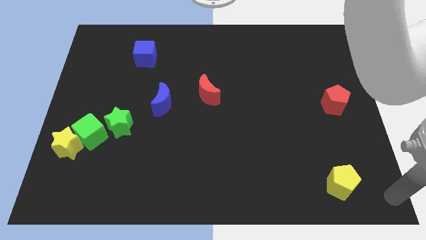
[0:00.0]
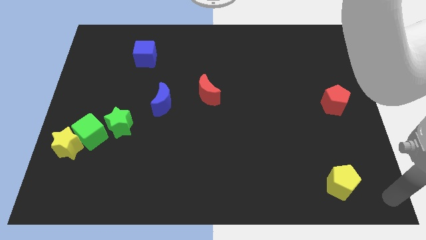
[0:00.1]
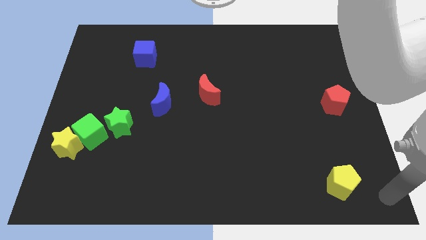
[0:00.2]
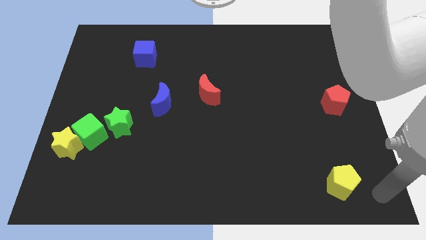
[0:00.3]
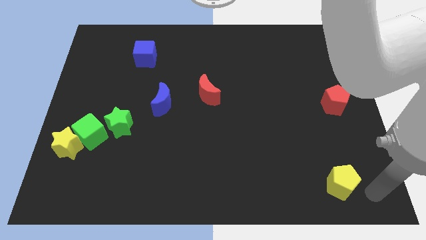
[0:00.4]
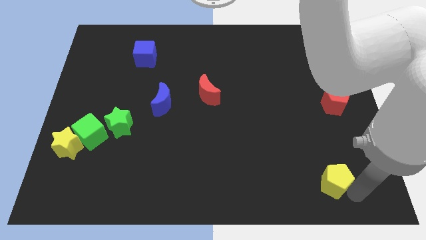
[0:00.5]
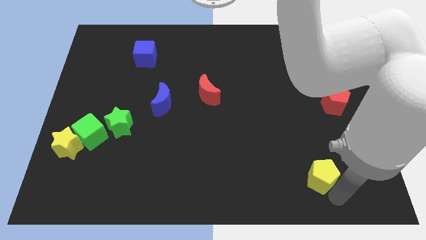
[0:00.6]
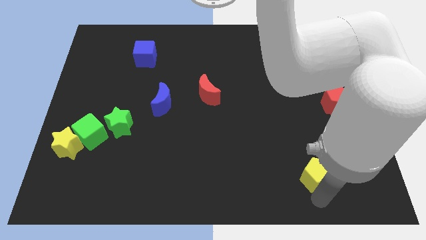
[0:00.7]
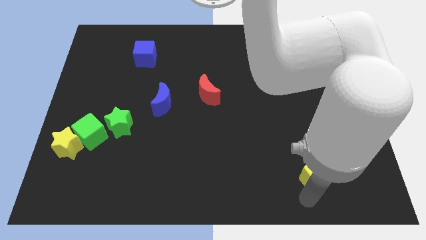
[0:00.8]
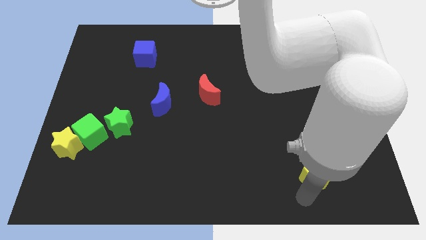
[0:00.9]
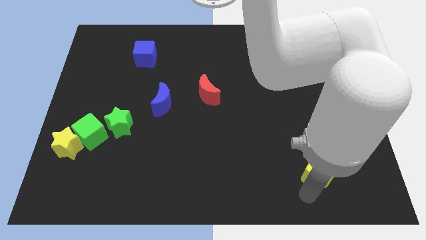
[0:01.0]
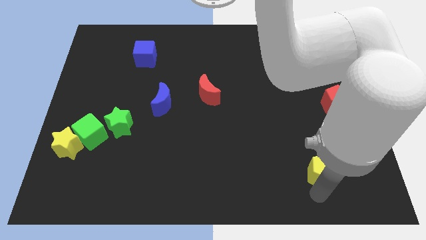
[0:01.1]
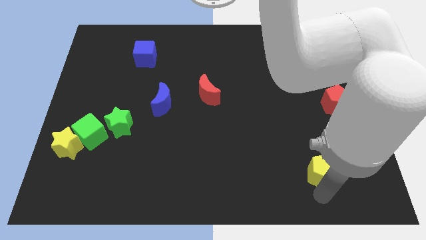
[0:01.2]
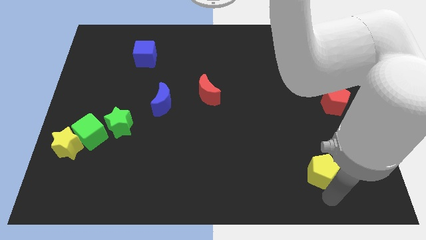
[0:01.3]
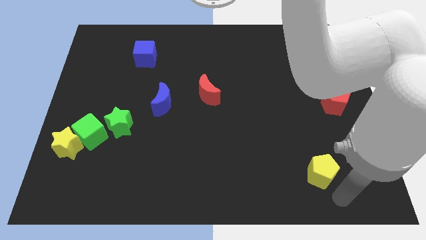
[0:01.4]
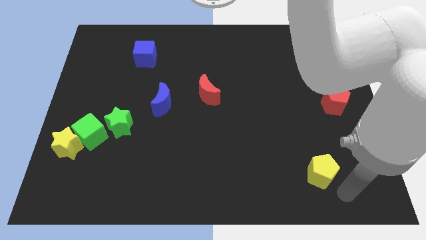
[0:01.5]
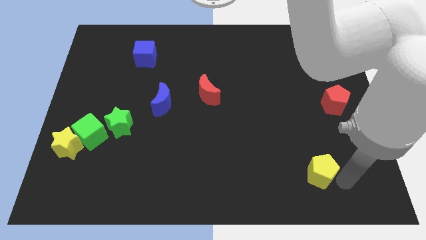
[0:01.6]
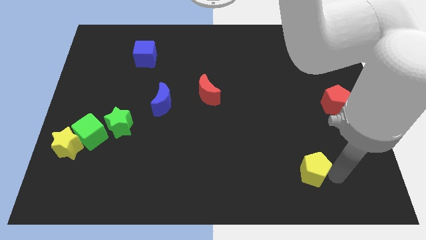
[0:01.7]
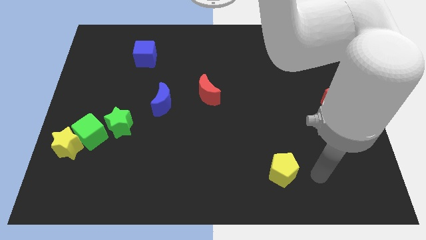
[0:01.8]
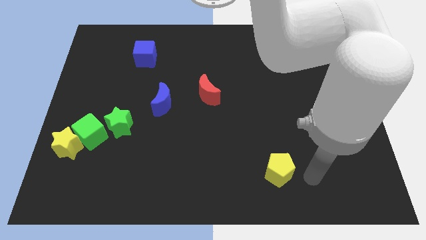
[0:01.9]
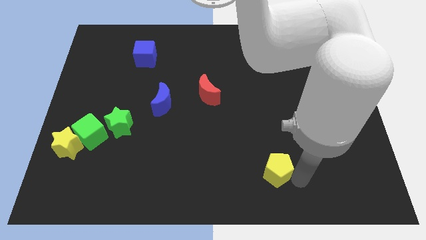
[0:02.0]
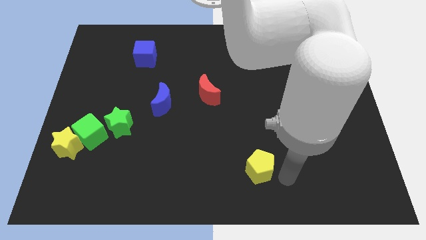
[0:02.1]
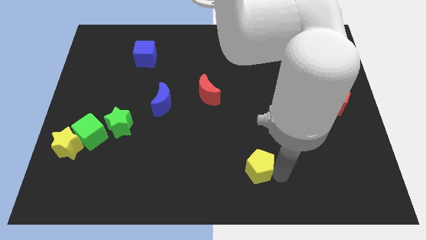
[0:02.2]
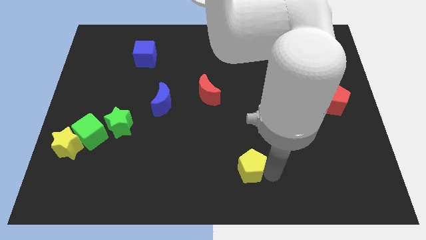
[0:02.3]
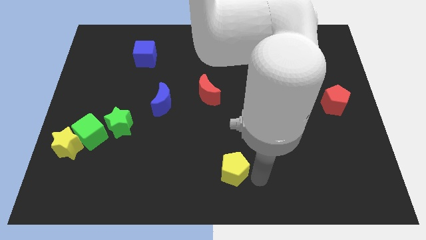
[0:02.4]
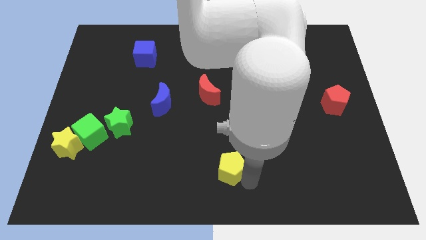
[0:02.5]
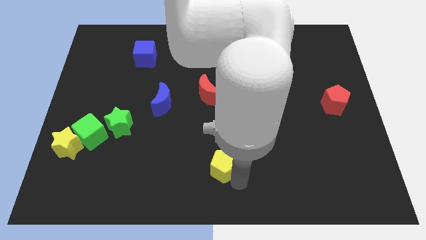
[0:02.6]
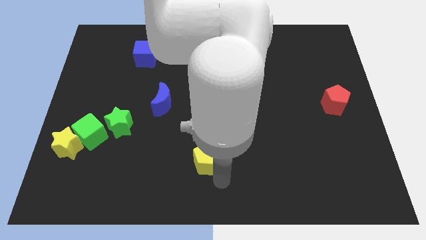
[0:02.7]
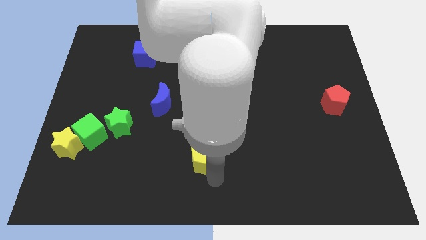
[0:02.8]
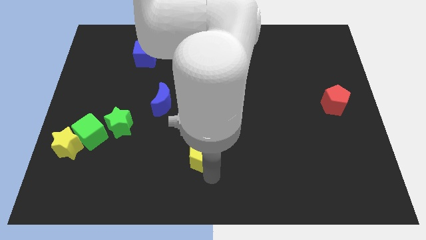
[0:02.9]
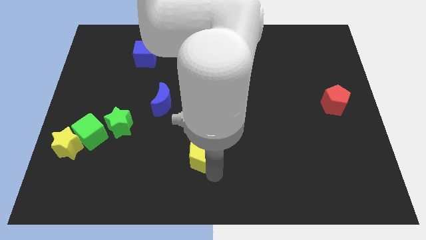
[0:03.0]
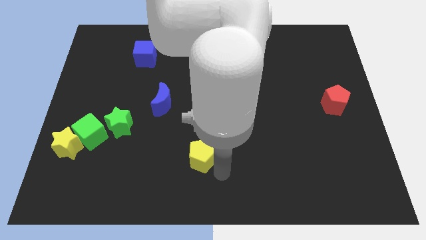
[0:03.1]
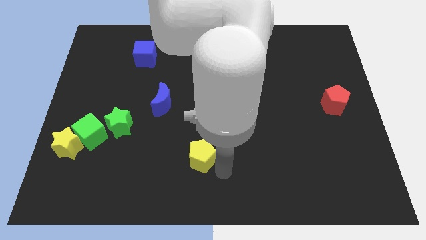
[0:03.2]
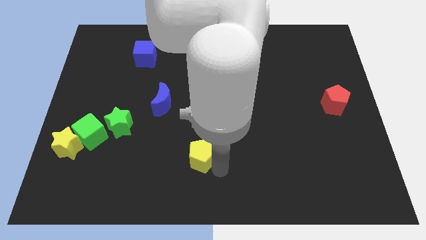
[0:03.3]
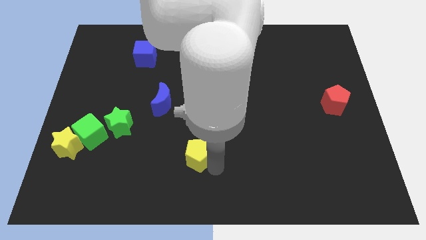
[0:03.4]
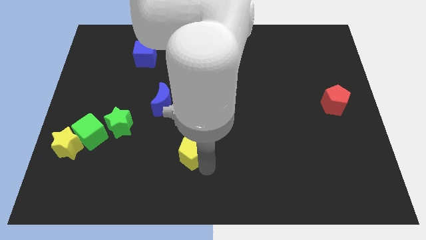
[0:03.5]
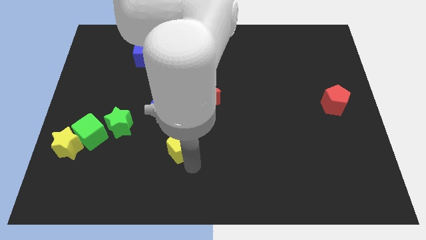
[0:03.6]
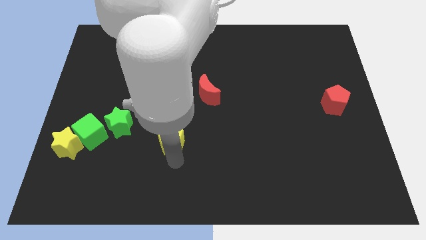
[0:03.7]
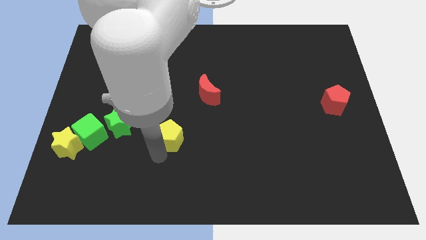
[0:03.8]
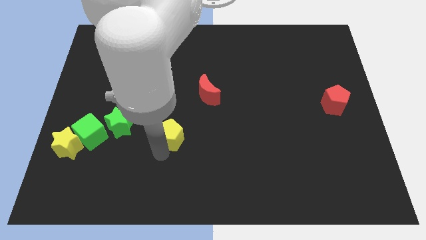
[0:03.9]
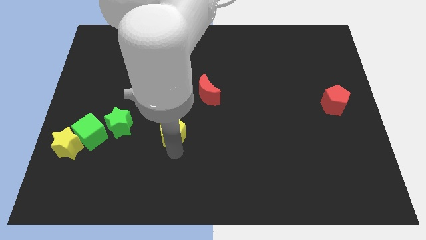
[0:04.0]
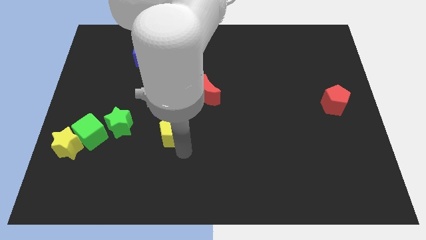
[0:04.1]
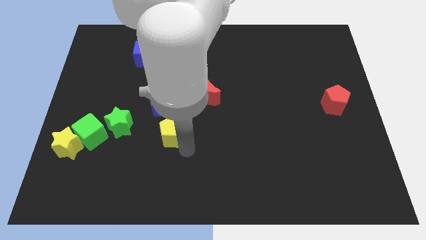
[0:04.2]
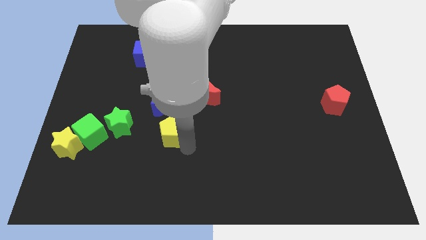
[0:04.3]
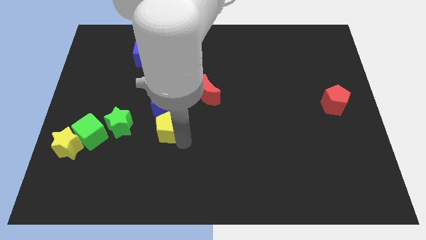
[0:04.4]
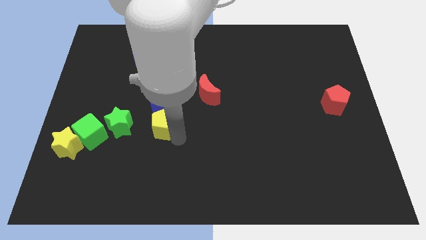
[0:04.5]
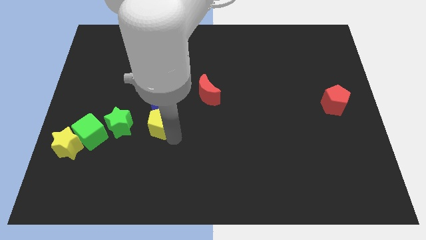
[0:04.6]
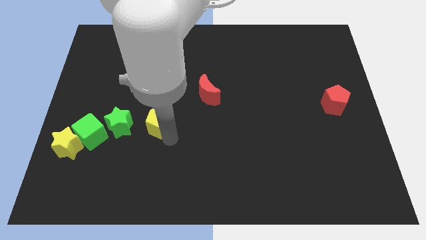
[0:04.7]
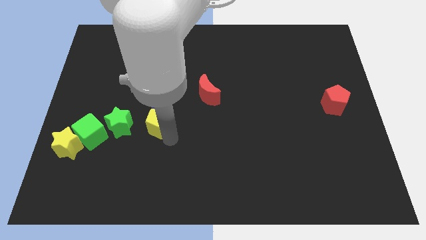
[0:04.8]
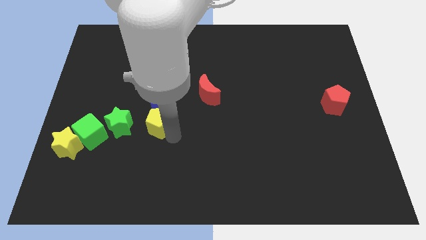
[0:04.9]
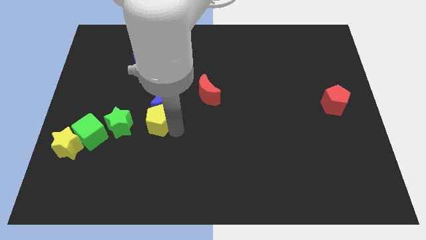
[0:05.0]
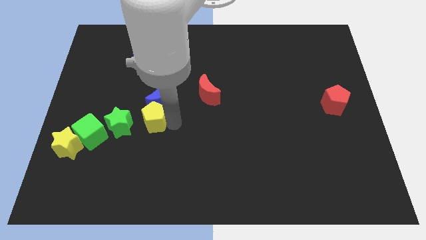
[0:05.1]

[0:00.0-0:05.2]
move the yellow pentagon into the bottom side of the blue moon

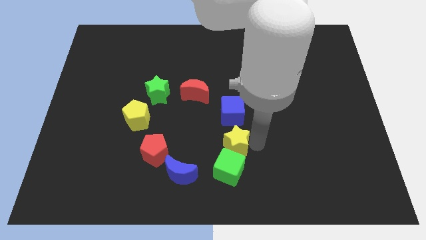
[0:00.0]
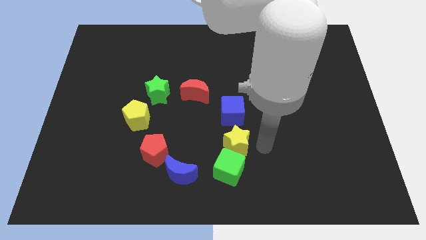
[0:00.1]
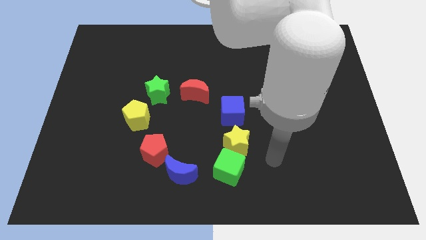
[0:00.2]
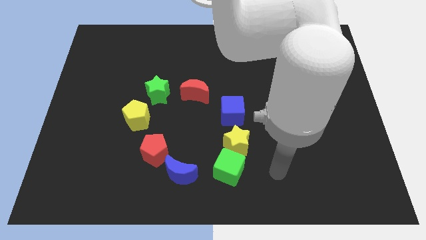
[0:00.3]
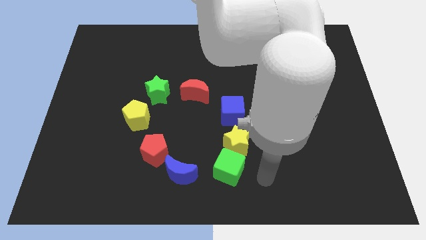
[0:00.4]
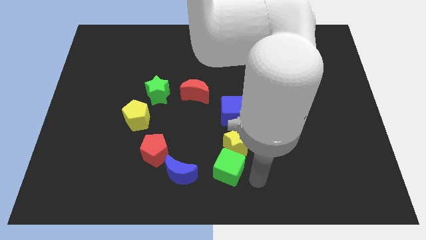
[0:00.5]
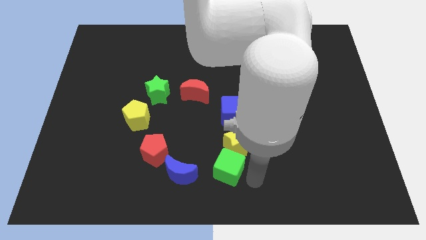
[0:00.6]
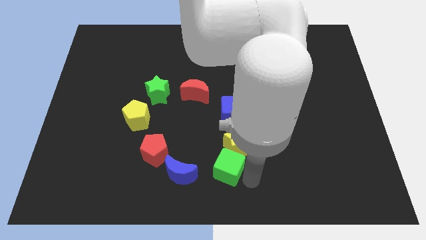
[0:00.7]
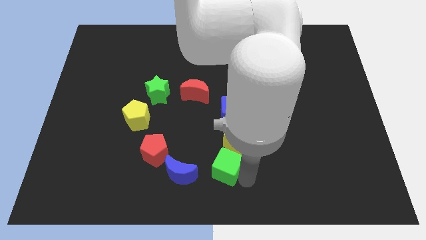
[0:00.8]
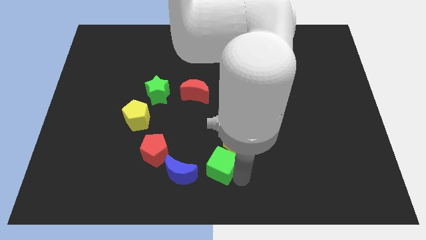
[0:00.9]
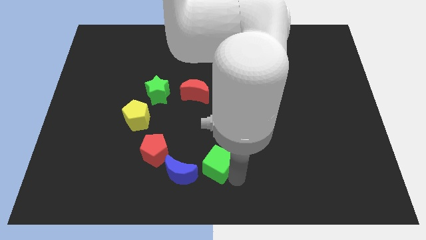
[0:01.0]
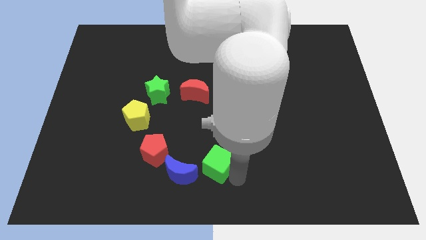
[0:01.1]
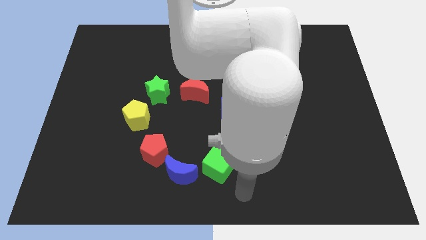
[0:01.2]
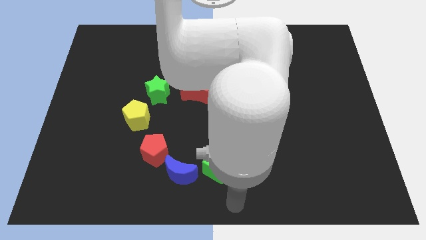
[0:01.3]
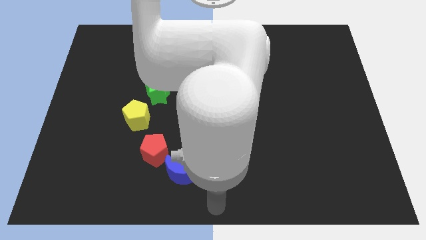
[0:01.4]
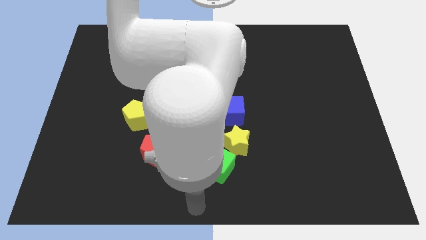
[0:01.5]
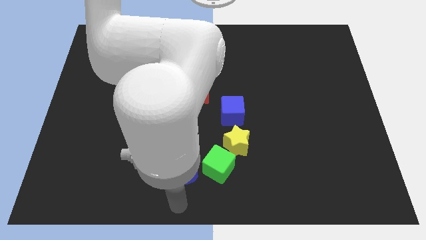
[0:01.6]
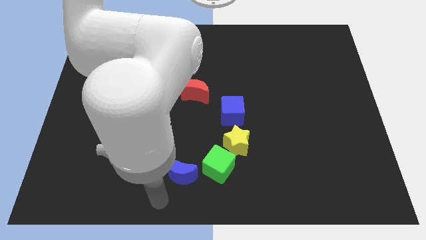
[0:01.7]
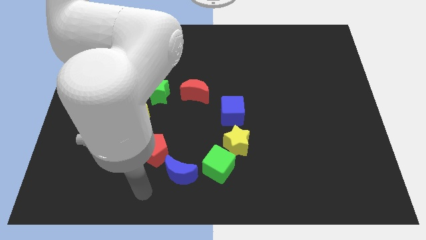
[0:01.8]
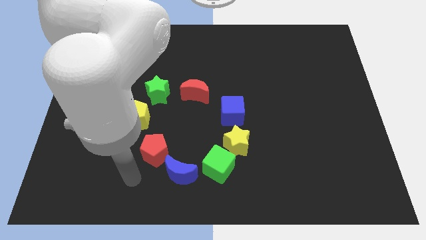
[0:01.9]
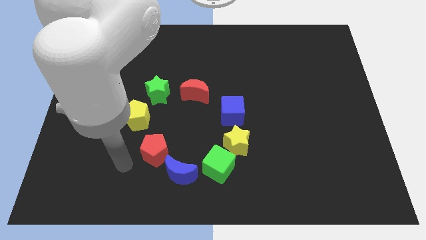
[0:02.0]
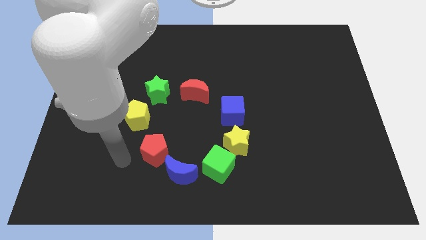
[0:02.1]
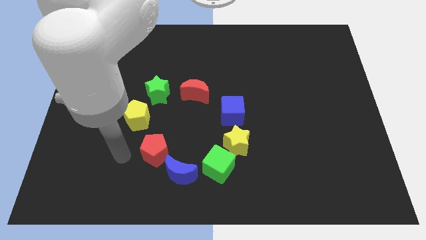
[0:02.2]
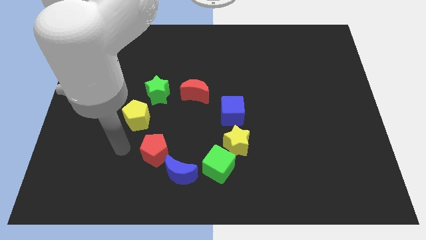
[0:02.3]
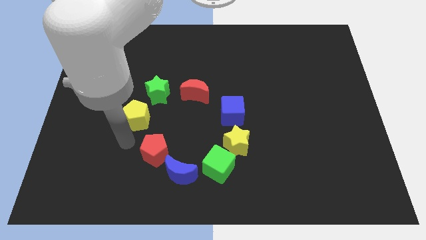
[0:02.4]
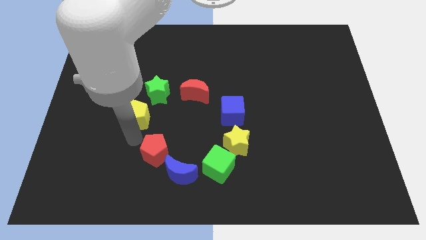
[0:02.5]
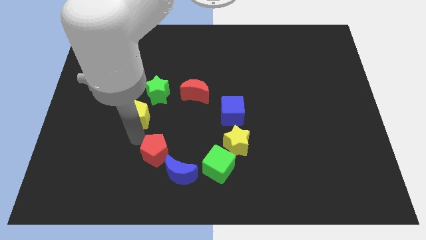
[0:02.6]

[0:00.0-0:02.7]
move your arm away from the yellow star

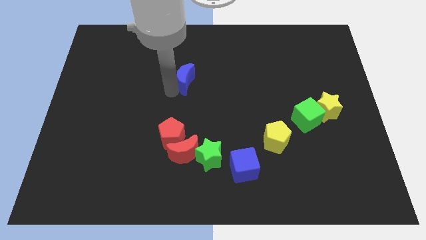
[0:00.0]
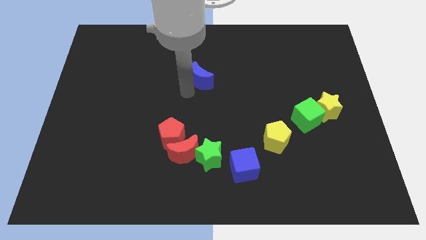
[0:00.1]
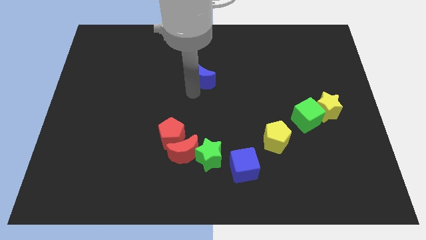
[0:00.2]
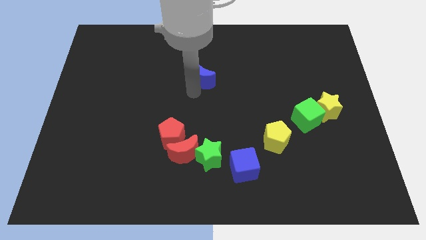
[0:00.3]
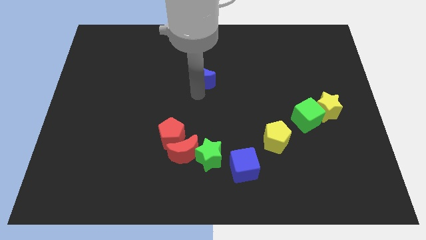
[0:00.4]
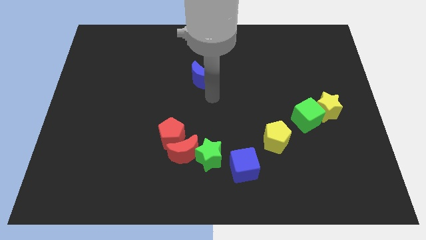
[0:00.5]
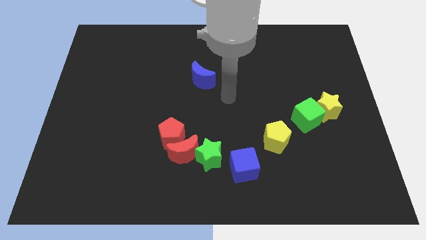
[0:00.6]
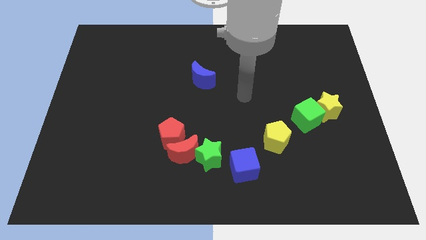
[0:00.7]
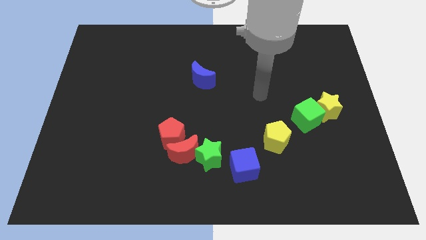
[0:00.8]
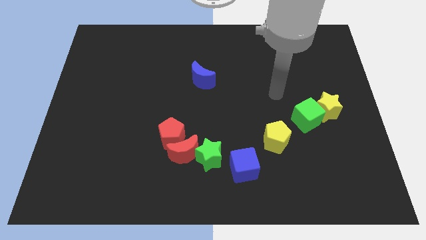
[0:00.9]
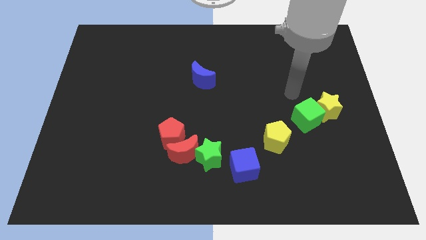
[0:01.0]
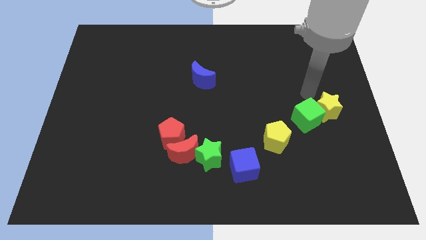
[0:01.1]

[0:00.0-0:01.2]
move your arm towards the top of the green cube
